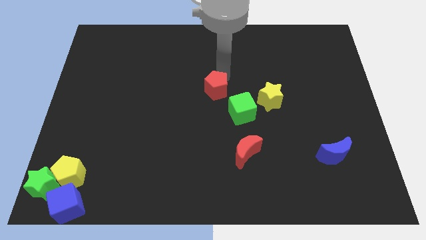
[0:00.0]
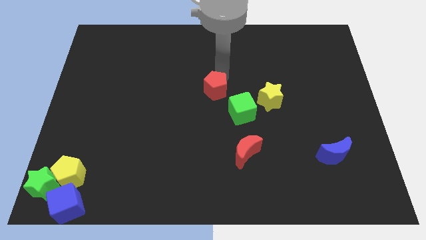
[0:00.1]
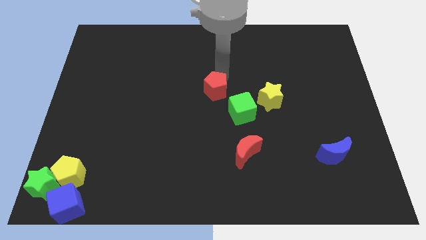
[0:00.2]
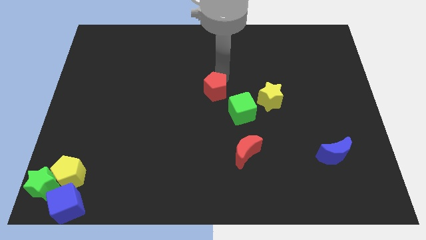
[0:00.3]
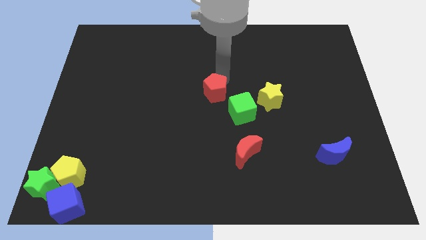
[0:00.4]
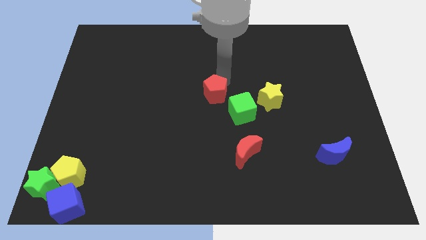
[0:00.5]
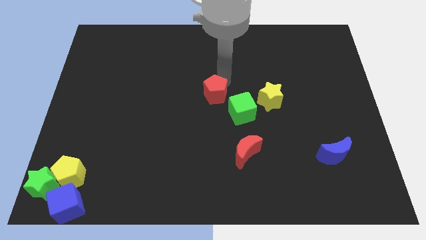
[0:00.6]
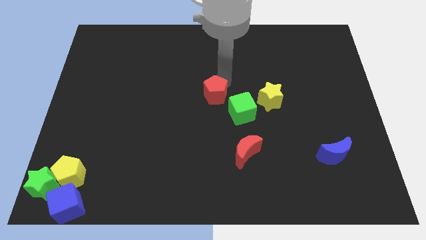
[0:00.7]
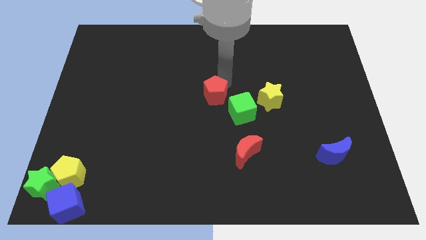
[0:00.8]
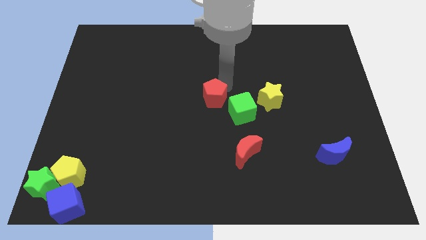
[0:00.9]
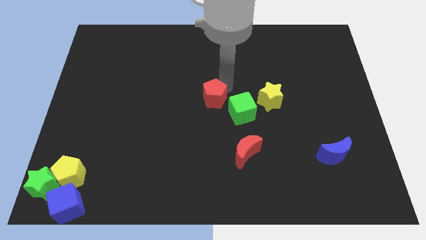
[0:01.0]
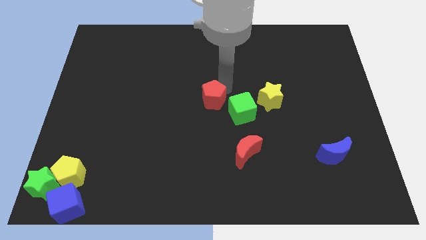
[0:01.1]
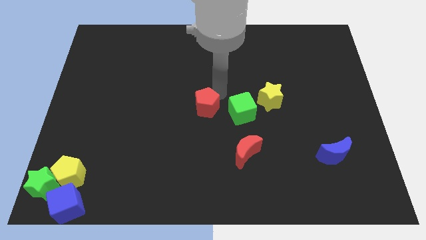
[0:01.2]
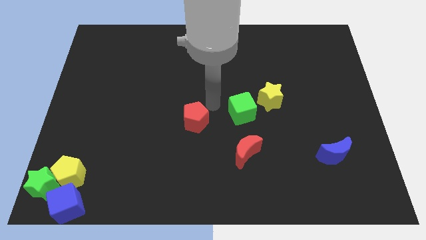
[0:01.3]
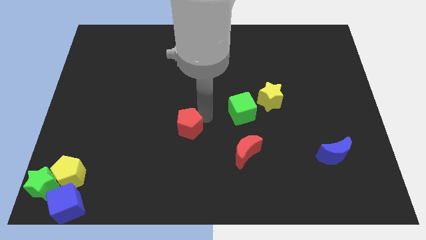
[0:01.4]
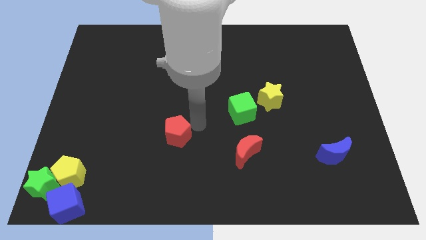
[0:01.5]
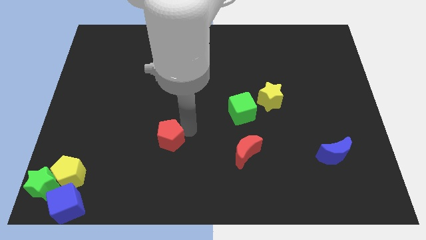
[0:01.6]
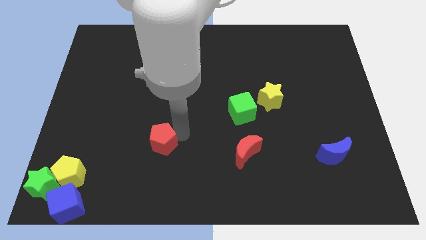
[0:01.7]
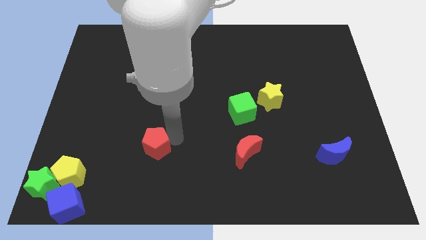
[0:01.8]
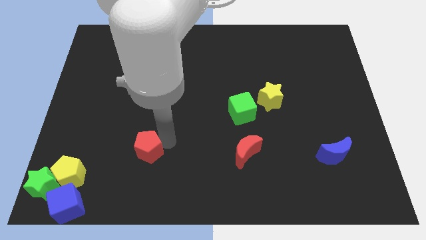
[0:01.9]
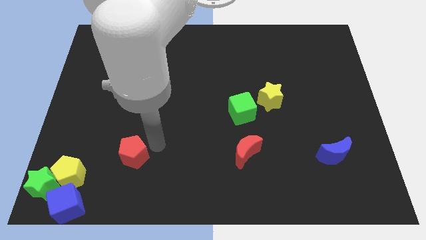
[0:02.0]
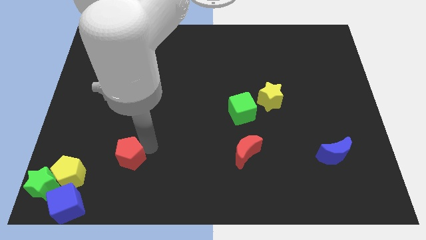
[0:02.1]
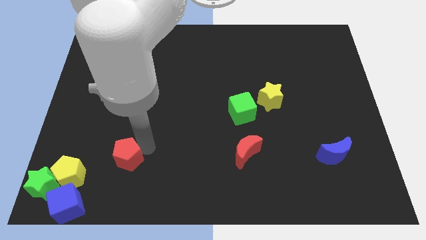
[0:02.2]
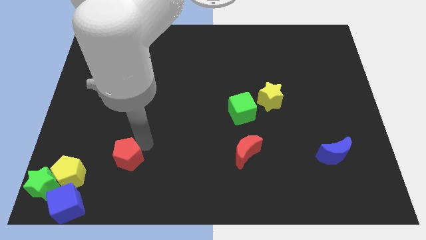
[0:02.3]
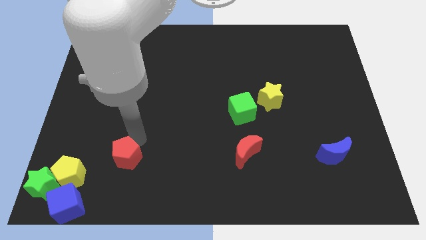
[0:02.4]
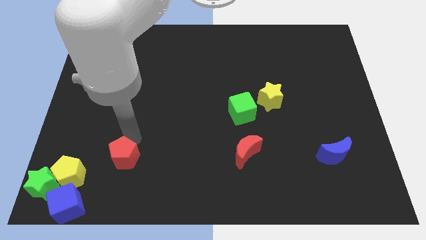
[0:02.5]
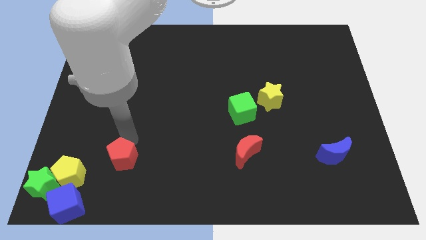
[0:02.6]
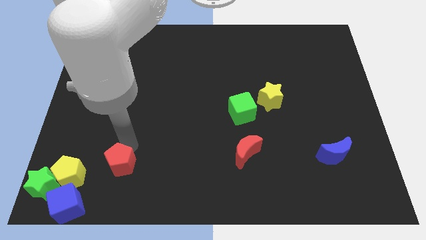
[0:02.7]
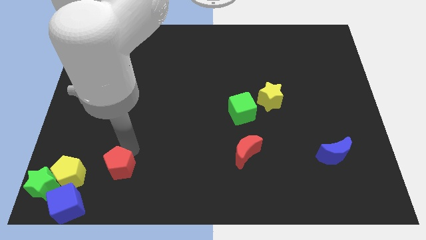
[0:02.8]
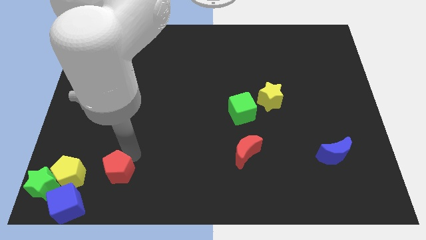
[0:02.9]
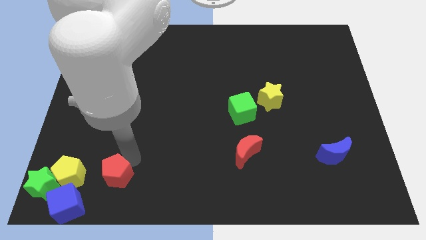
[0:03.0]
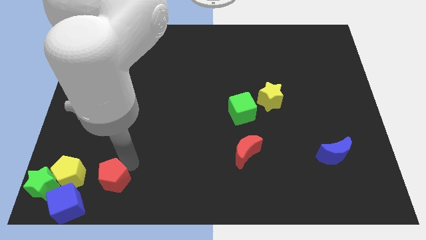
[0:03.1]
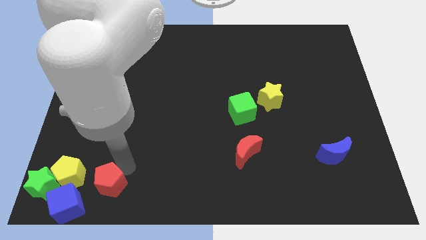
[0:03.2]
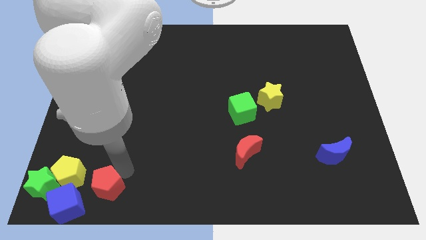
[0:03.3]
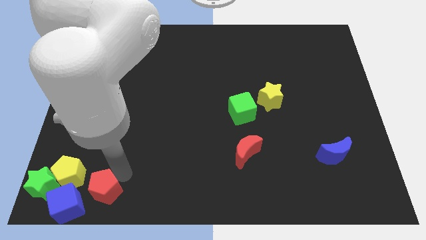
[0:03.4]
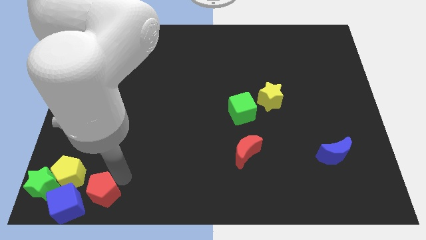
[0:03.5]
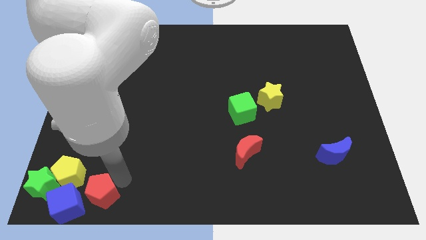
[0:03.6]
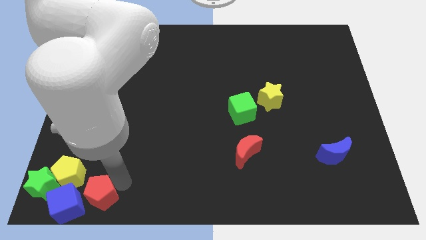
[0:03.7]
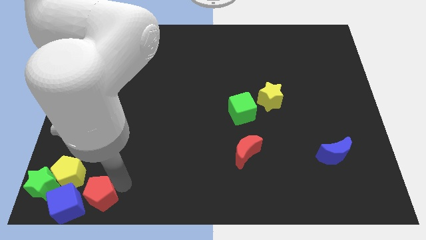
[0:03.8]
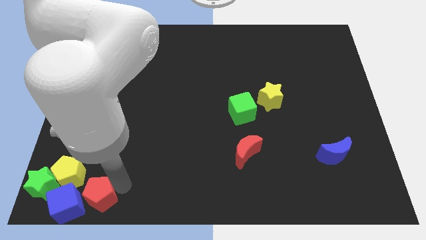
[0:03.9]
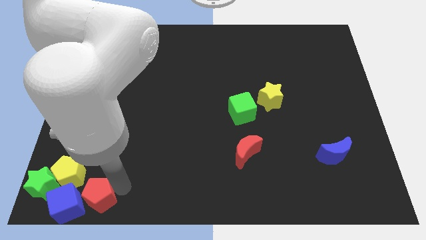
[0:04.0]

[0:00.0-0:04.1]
push red pentagon into blue cube

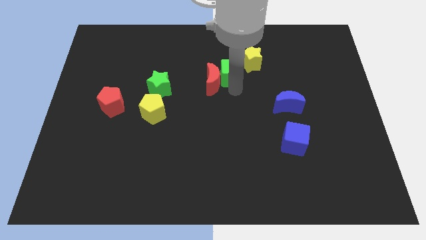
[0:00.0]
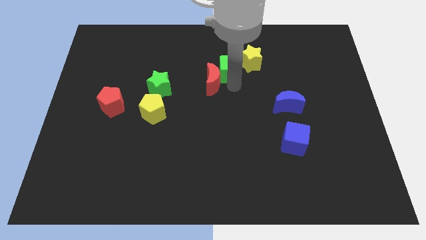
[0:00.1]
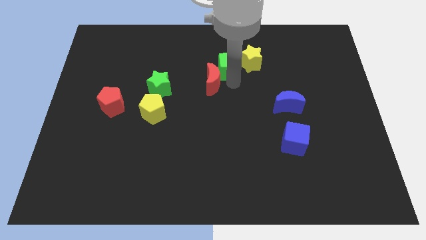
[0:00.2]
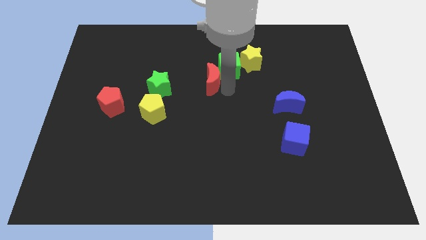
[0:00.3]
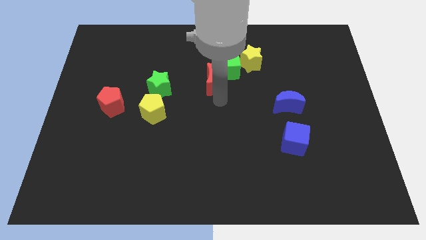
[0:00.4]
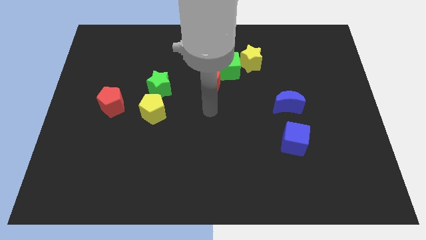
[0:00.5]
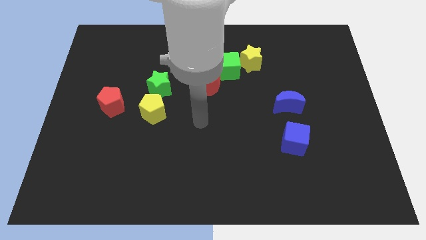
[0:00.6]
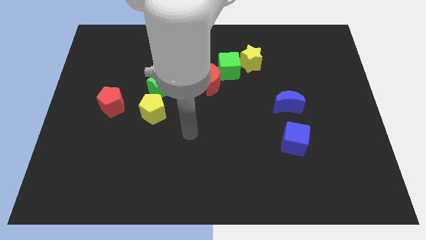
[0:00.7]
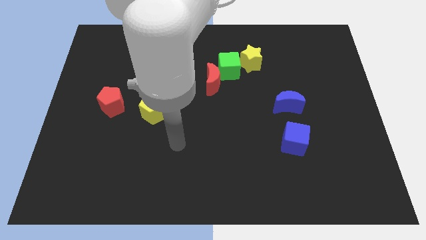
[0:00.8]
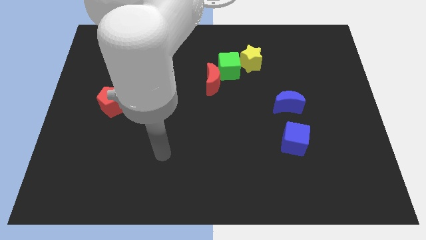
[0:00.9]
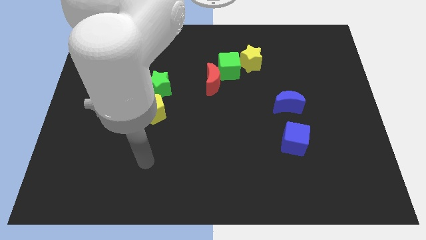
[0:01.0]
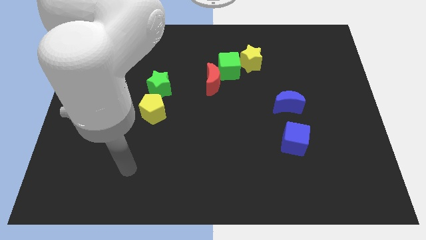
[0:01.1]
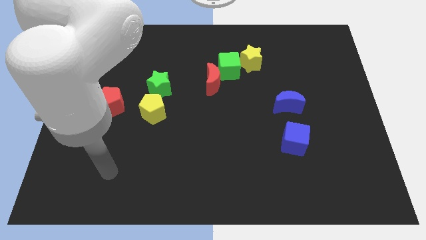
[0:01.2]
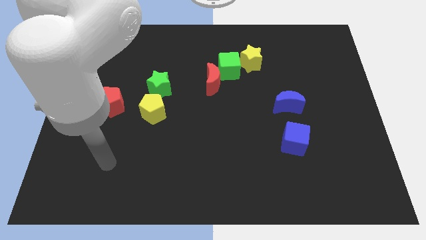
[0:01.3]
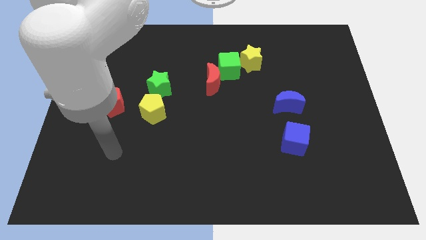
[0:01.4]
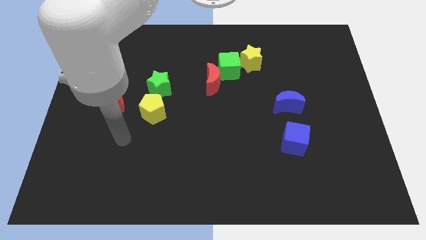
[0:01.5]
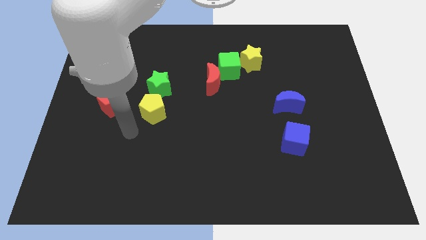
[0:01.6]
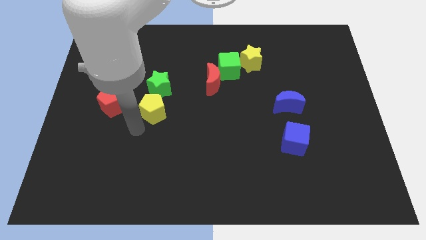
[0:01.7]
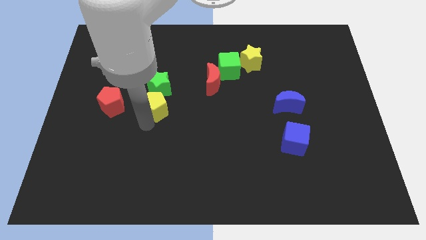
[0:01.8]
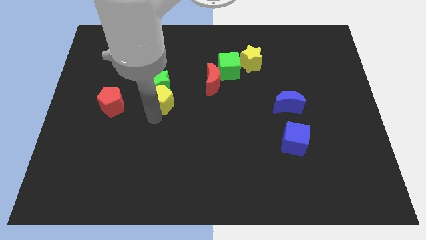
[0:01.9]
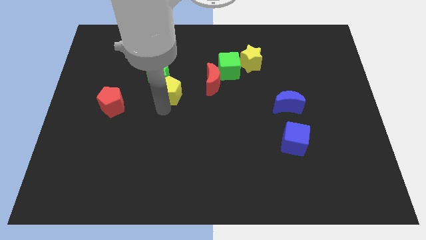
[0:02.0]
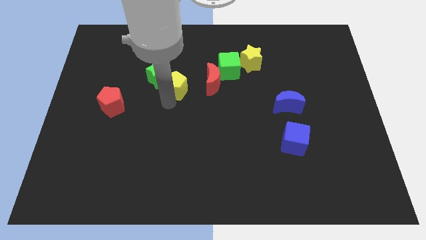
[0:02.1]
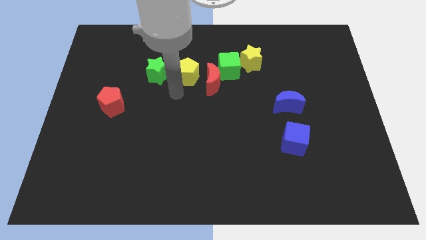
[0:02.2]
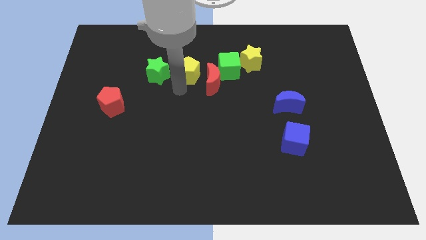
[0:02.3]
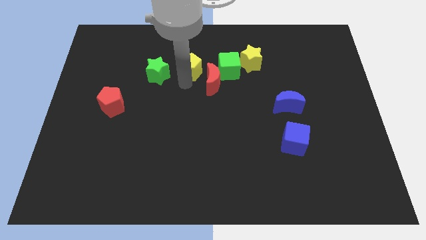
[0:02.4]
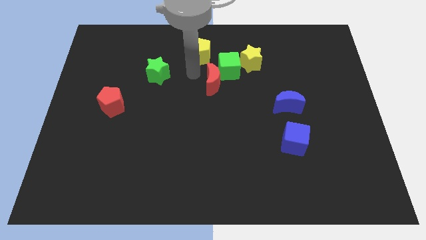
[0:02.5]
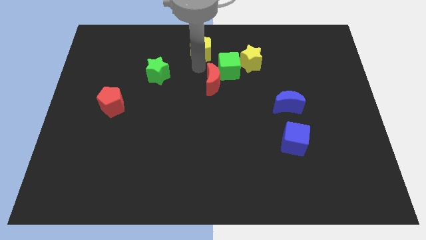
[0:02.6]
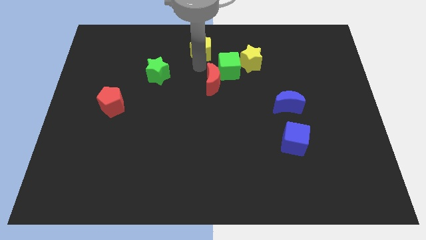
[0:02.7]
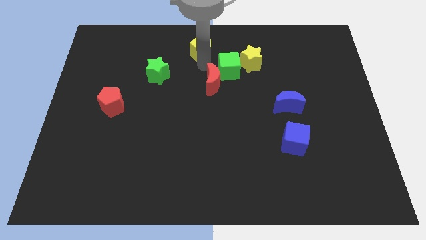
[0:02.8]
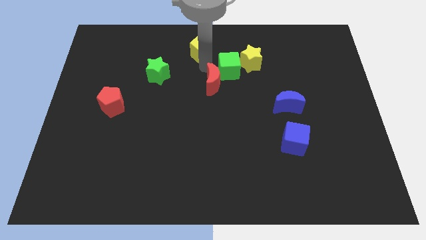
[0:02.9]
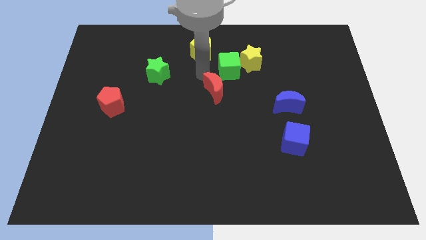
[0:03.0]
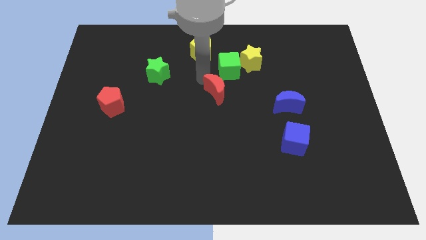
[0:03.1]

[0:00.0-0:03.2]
separate the yellow pentagon and green star

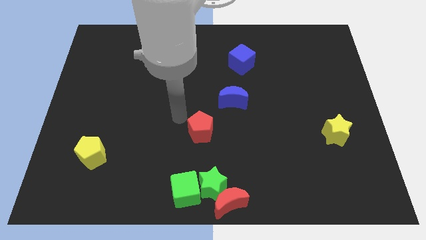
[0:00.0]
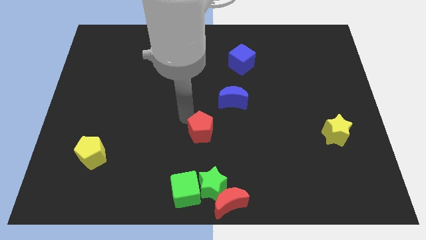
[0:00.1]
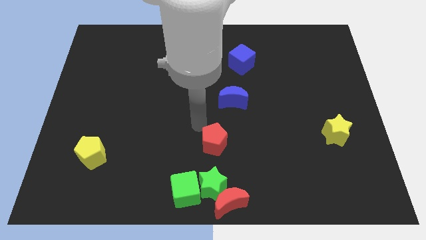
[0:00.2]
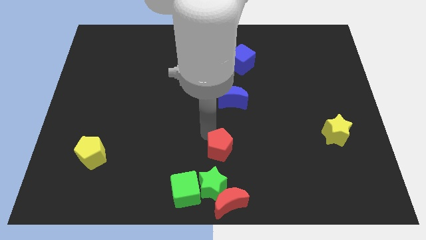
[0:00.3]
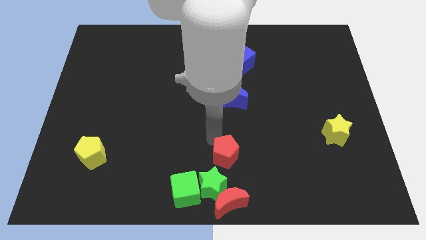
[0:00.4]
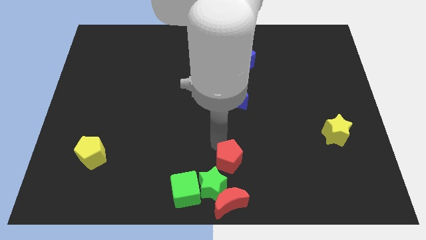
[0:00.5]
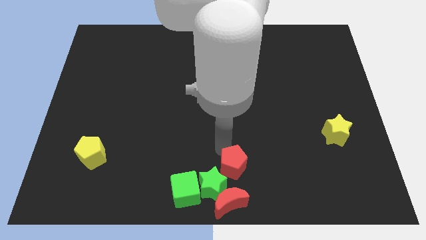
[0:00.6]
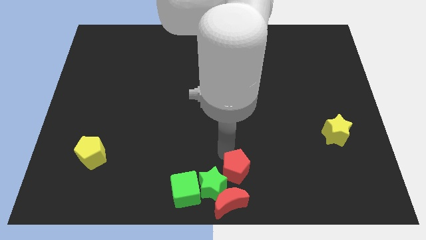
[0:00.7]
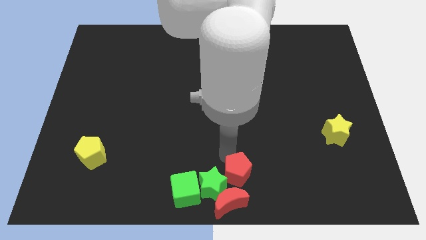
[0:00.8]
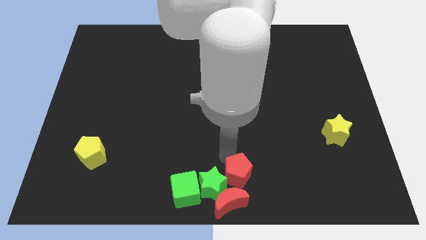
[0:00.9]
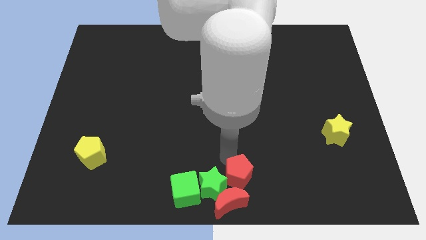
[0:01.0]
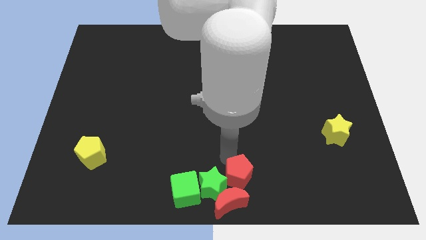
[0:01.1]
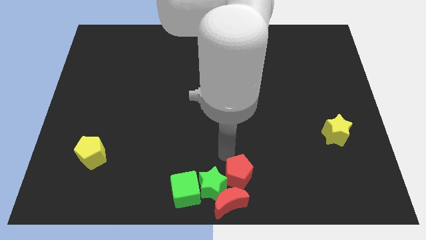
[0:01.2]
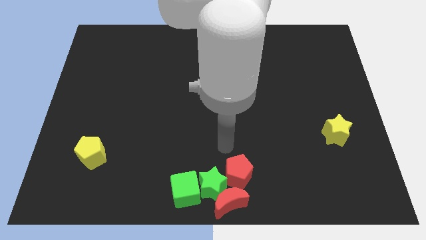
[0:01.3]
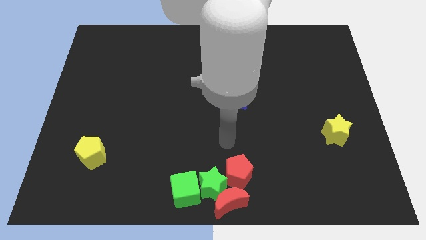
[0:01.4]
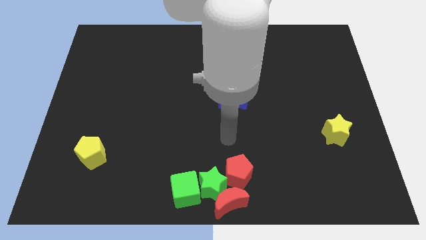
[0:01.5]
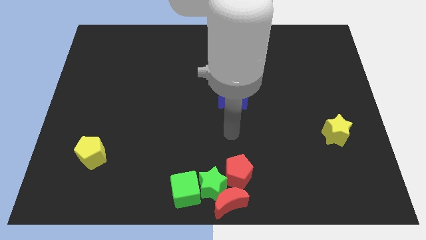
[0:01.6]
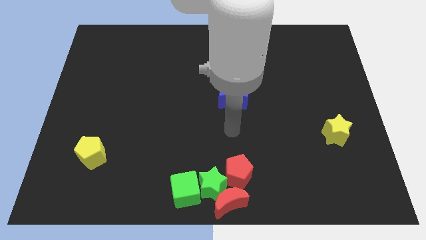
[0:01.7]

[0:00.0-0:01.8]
add the red pentagon to the group of blocks at the bottom center of the board
